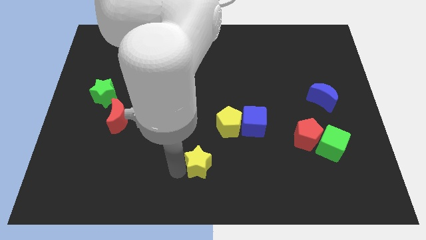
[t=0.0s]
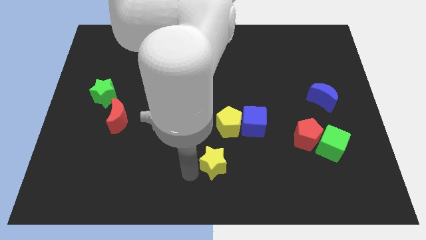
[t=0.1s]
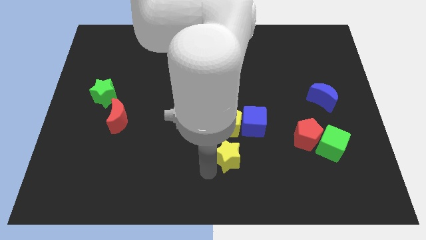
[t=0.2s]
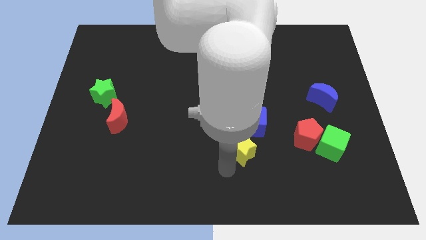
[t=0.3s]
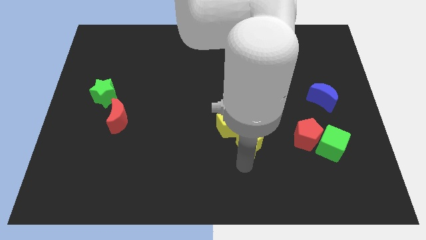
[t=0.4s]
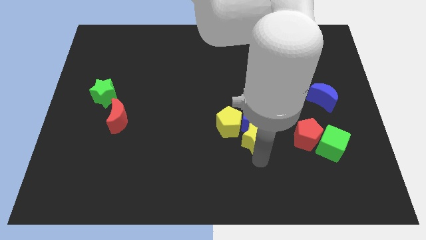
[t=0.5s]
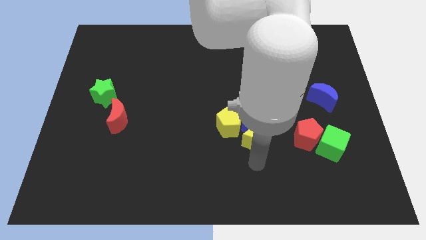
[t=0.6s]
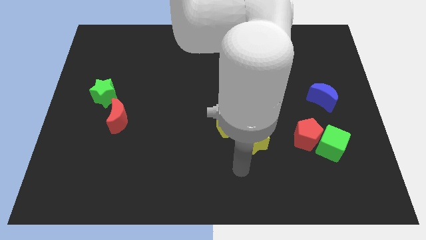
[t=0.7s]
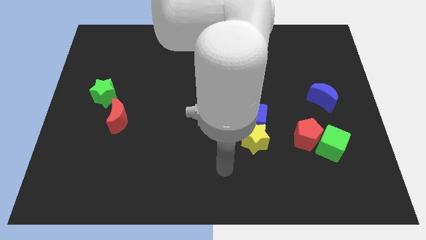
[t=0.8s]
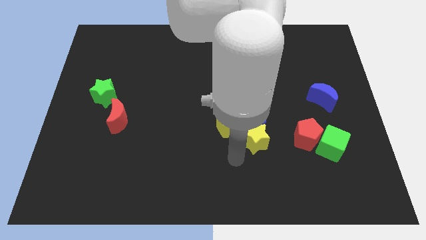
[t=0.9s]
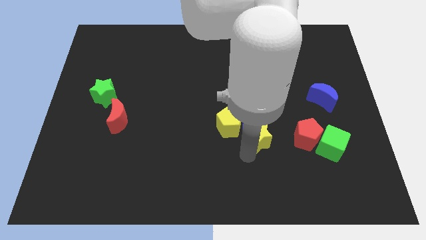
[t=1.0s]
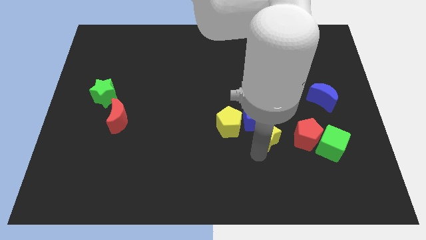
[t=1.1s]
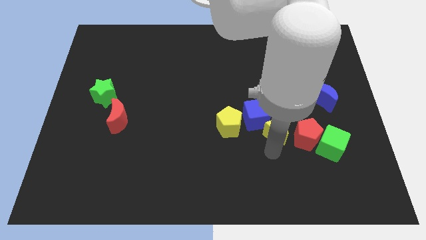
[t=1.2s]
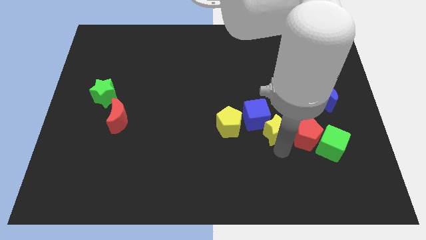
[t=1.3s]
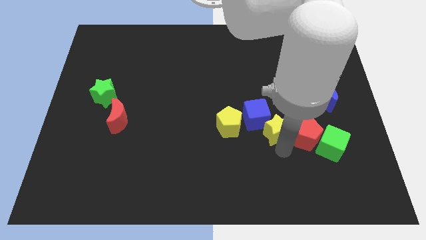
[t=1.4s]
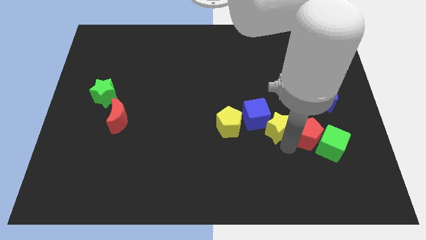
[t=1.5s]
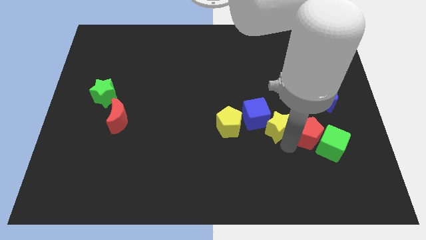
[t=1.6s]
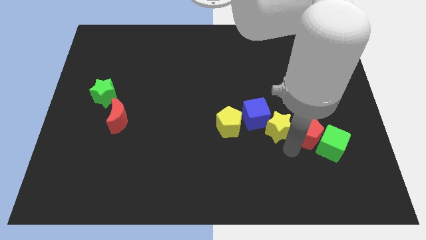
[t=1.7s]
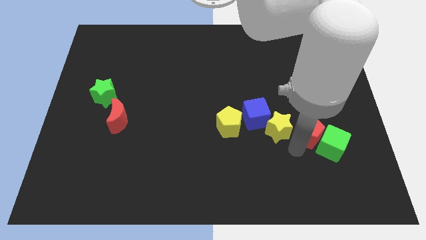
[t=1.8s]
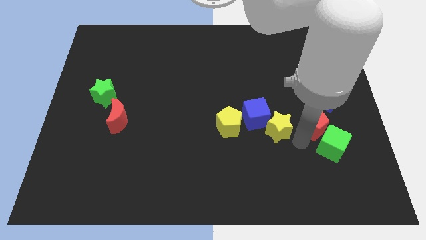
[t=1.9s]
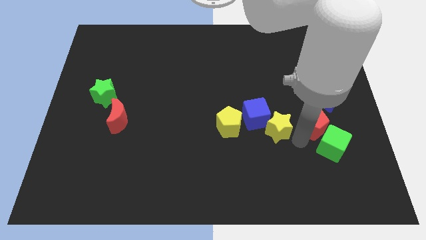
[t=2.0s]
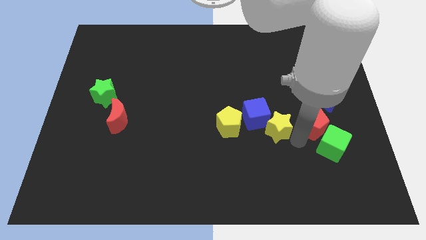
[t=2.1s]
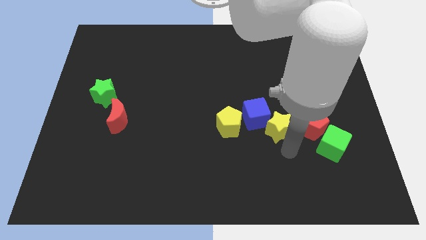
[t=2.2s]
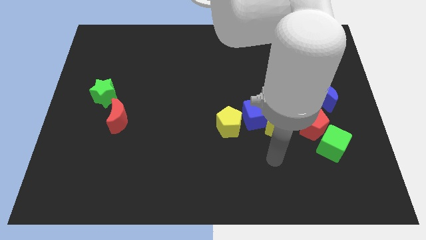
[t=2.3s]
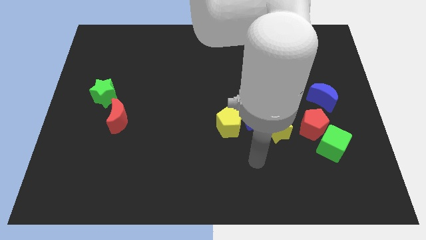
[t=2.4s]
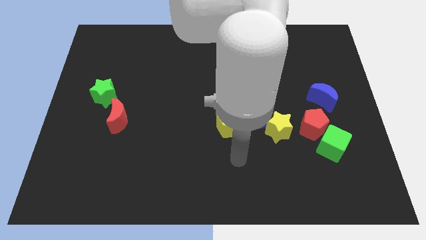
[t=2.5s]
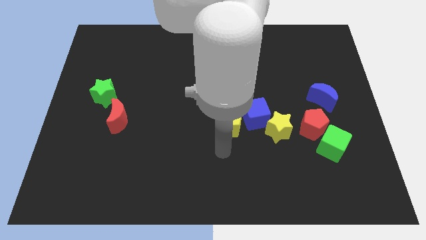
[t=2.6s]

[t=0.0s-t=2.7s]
place yellow star bear blue cube

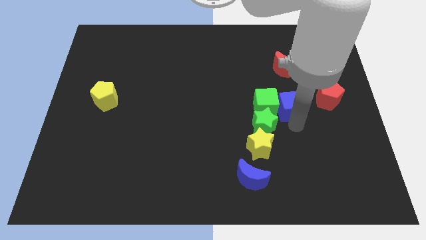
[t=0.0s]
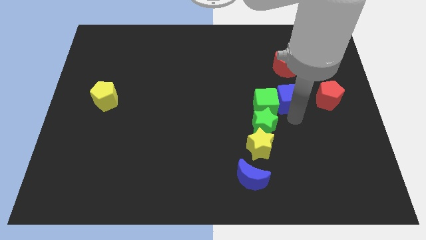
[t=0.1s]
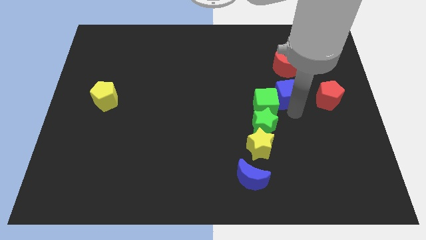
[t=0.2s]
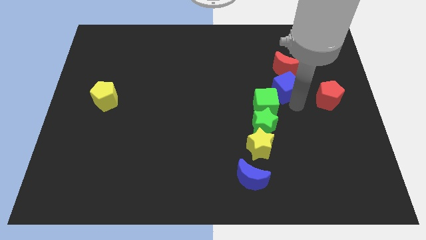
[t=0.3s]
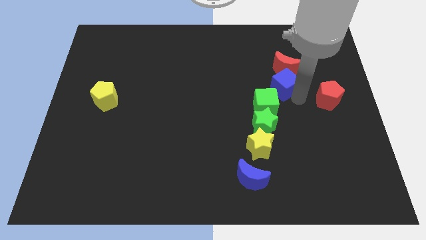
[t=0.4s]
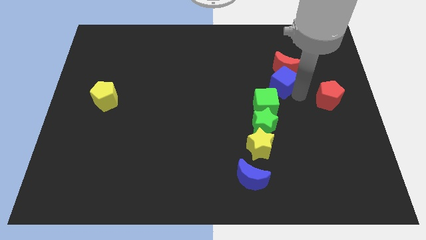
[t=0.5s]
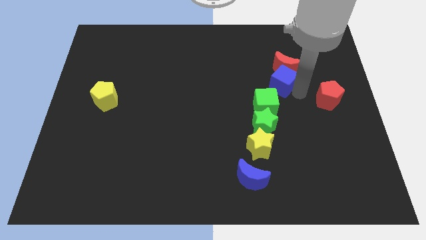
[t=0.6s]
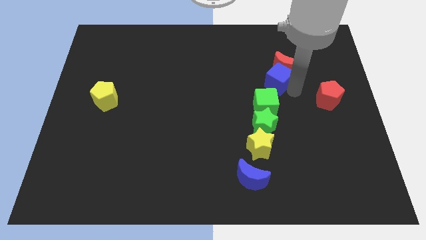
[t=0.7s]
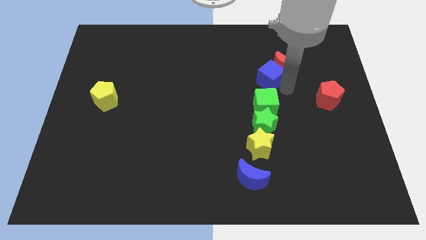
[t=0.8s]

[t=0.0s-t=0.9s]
place blue cube above green cube

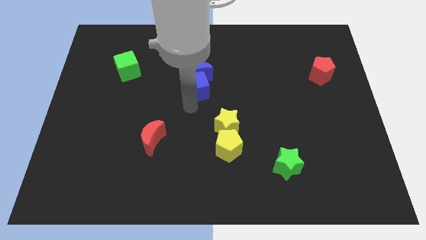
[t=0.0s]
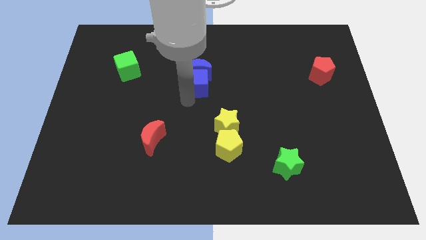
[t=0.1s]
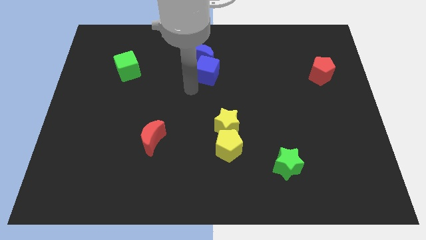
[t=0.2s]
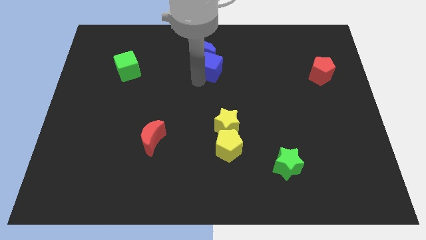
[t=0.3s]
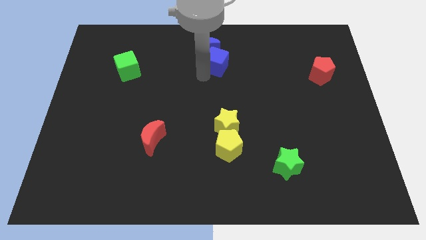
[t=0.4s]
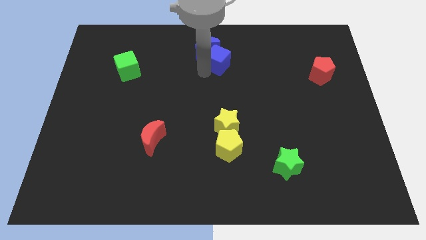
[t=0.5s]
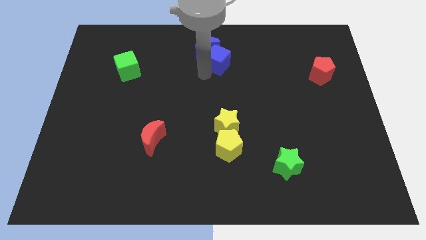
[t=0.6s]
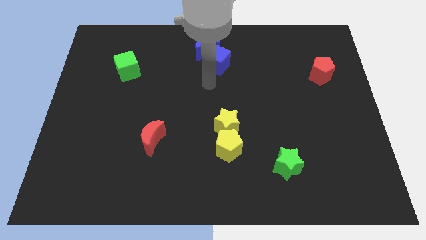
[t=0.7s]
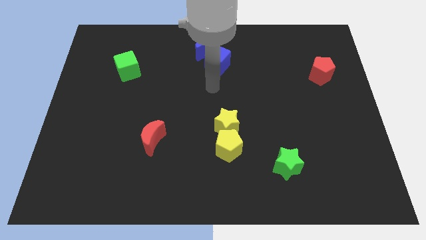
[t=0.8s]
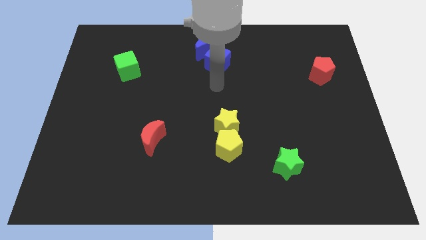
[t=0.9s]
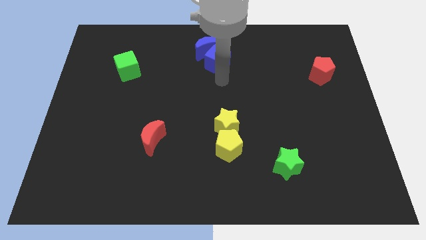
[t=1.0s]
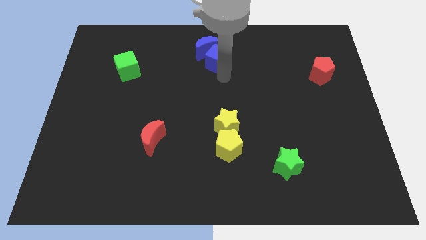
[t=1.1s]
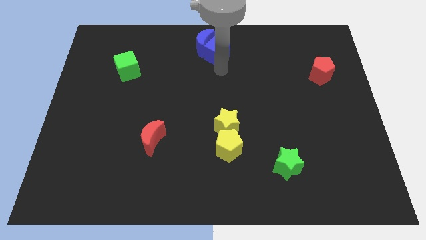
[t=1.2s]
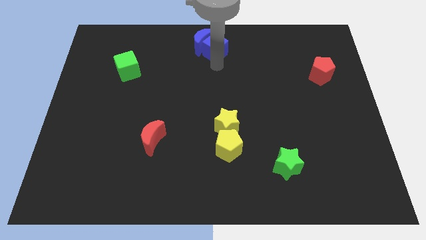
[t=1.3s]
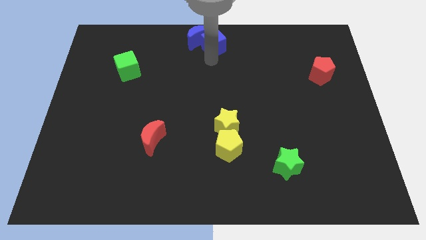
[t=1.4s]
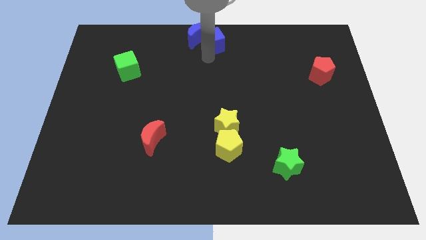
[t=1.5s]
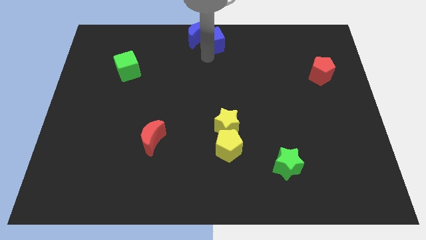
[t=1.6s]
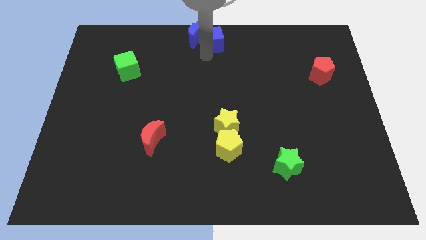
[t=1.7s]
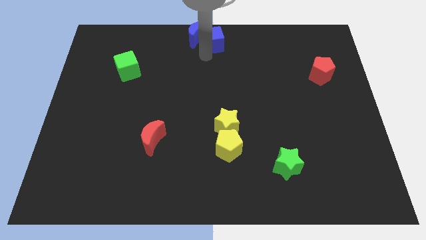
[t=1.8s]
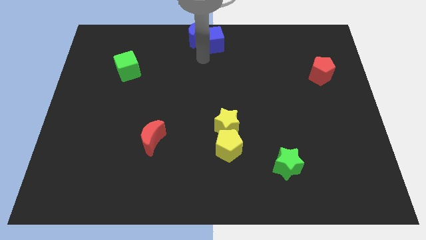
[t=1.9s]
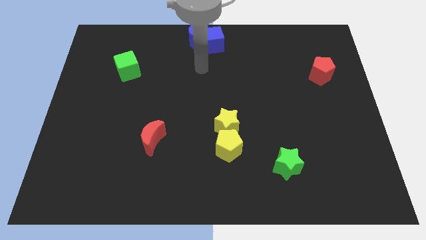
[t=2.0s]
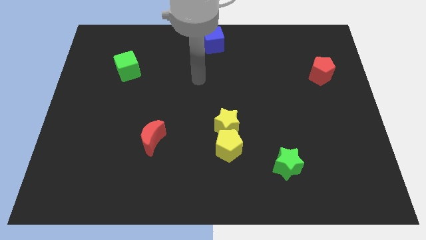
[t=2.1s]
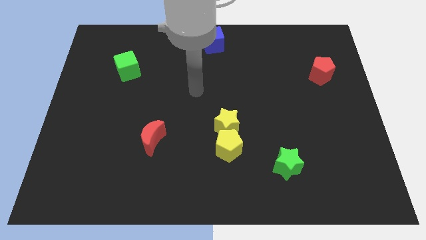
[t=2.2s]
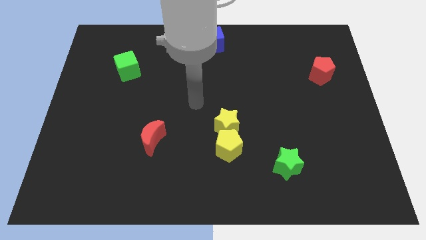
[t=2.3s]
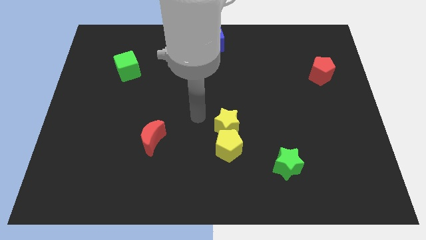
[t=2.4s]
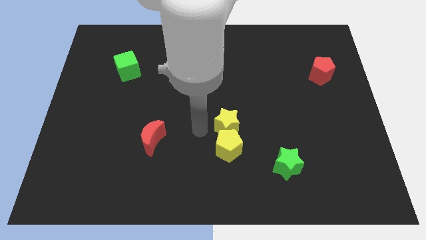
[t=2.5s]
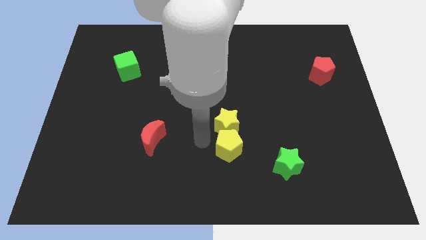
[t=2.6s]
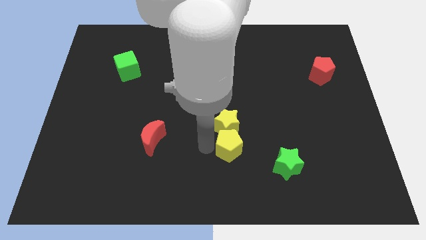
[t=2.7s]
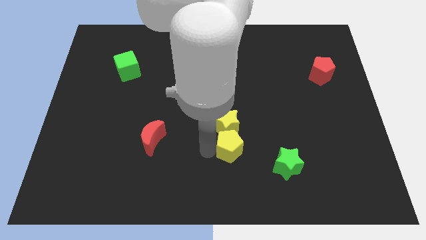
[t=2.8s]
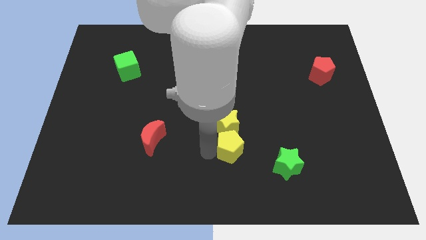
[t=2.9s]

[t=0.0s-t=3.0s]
drag the blue cube to the top center

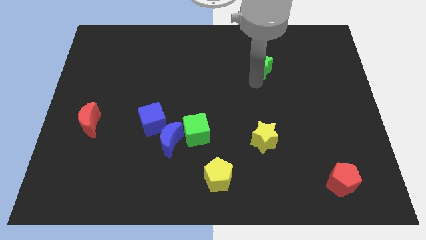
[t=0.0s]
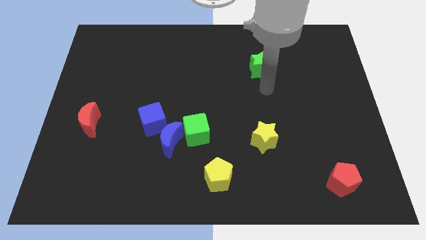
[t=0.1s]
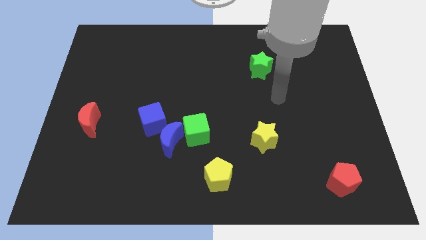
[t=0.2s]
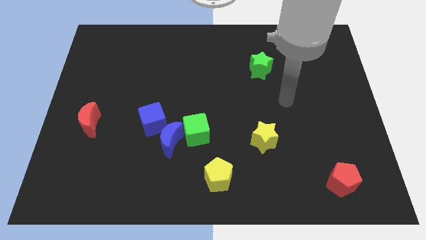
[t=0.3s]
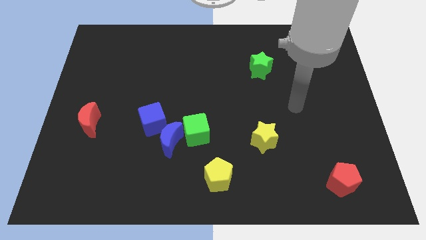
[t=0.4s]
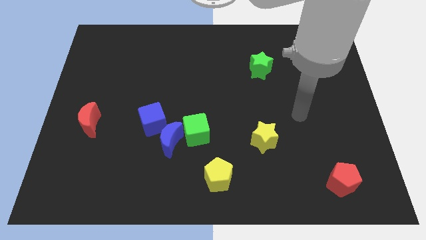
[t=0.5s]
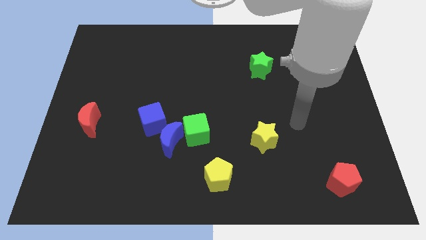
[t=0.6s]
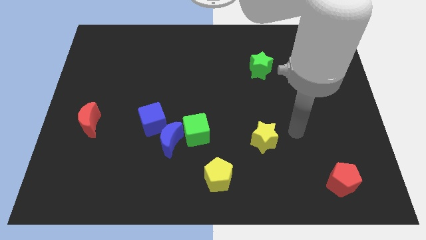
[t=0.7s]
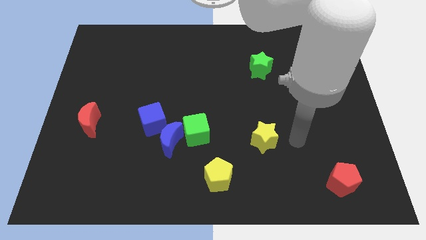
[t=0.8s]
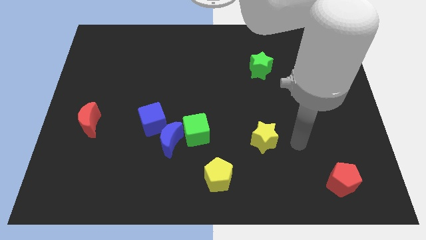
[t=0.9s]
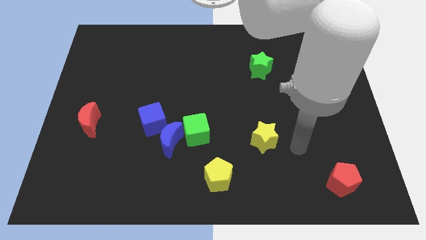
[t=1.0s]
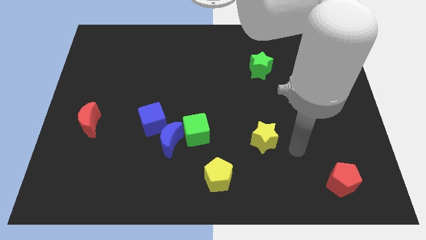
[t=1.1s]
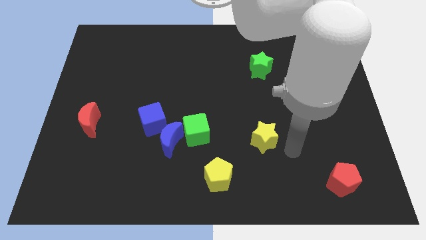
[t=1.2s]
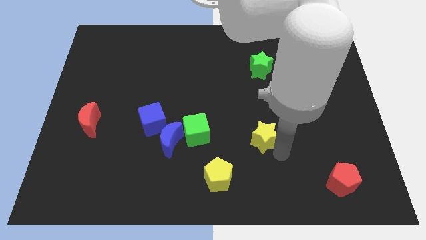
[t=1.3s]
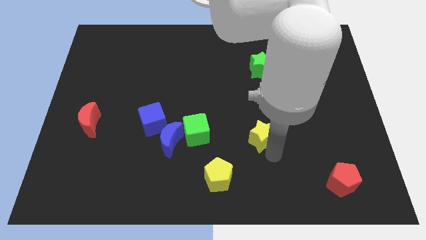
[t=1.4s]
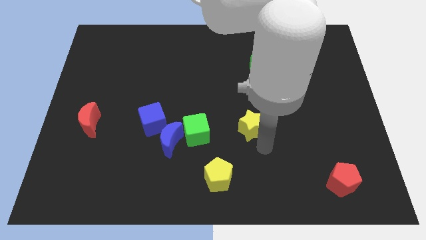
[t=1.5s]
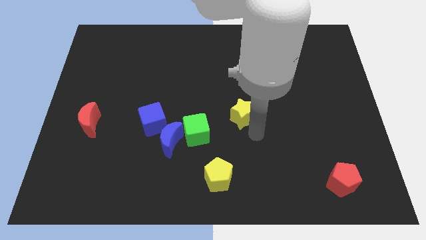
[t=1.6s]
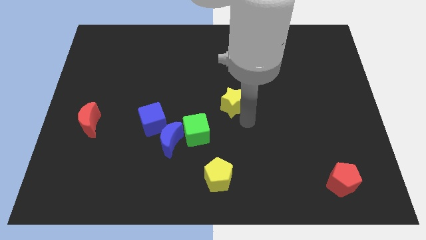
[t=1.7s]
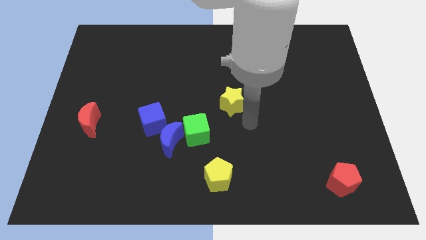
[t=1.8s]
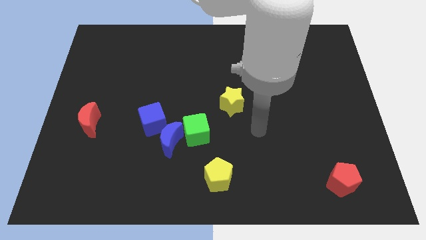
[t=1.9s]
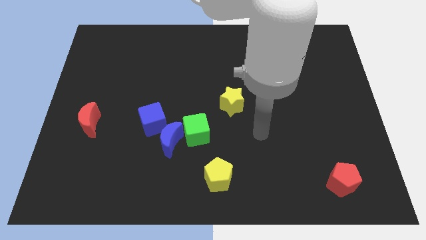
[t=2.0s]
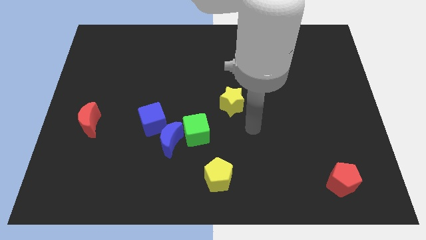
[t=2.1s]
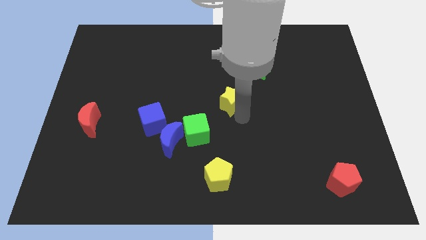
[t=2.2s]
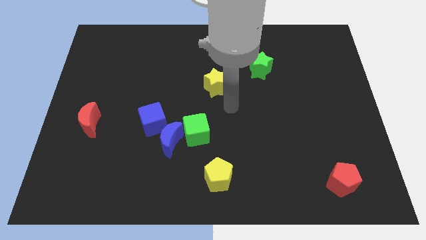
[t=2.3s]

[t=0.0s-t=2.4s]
push the yellow star towards the top side of the board

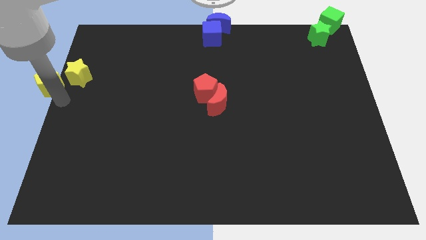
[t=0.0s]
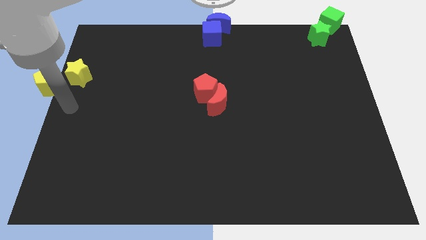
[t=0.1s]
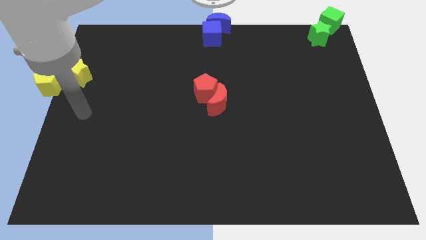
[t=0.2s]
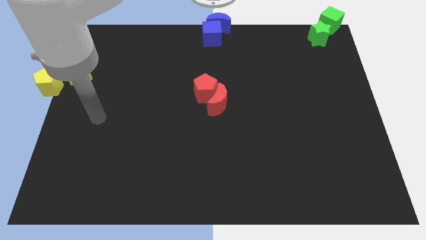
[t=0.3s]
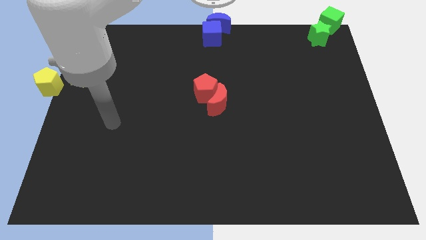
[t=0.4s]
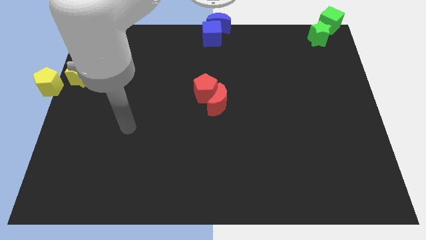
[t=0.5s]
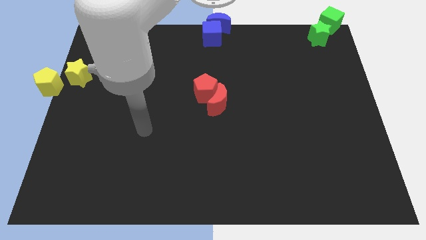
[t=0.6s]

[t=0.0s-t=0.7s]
move the arm away from the yellow pentagon
